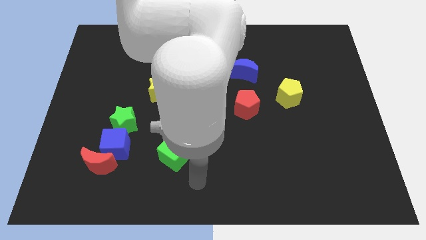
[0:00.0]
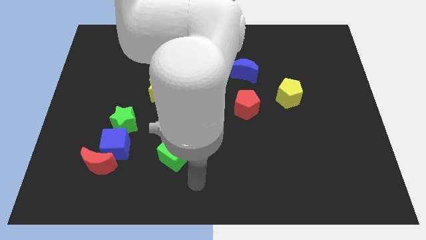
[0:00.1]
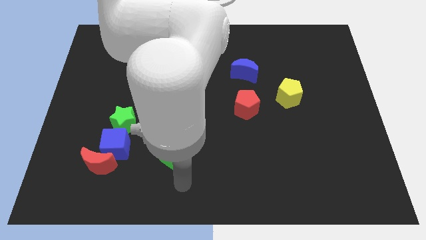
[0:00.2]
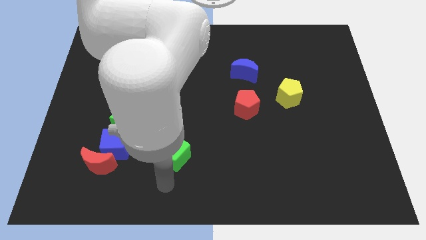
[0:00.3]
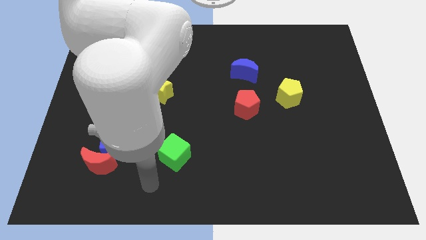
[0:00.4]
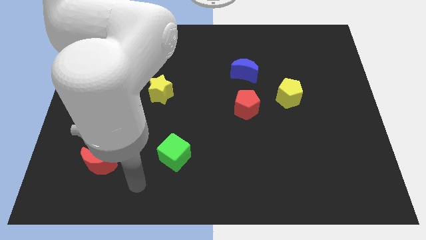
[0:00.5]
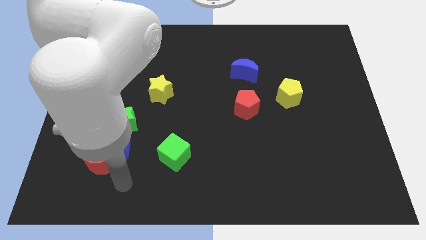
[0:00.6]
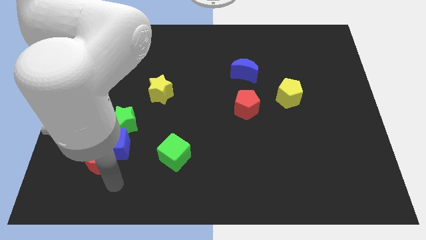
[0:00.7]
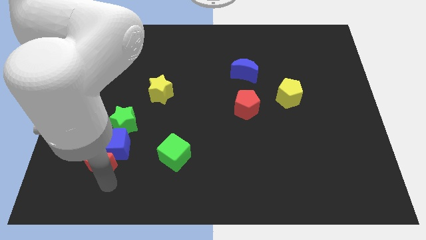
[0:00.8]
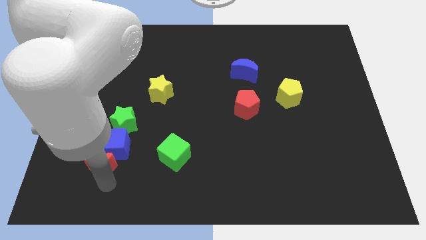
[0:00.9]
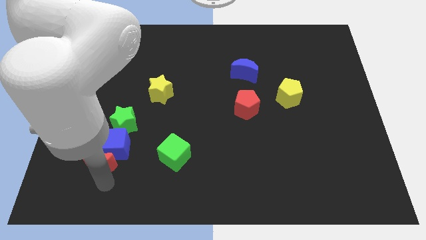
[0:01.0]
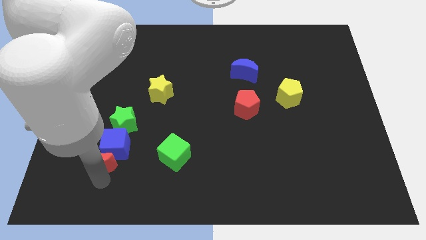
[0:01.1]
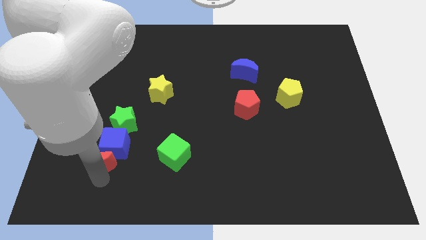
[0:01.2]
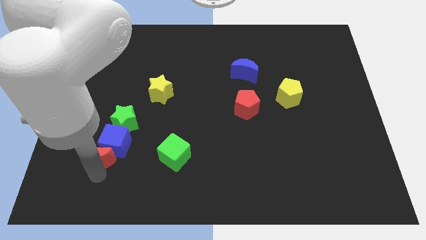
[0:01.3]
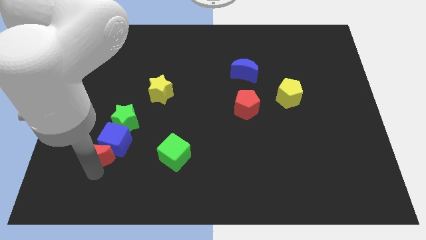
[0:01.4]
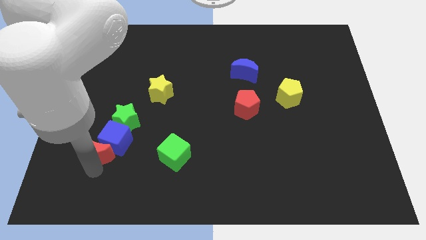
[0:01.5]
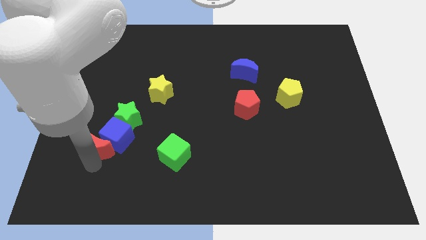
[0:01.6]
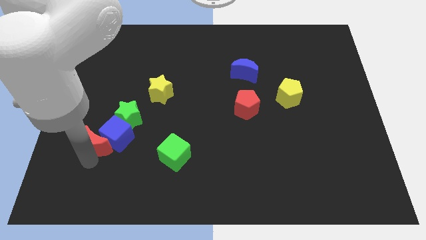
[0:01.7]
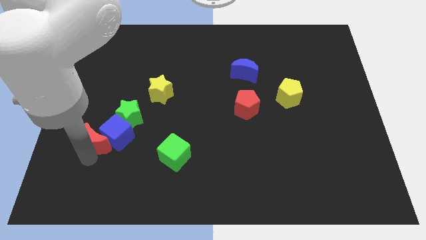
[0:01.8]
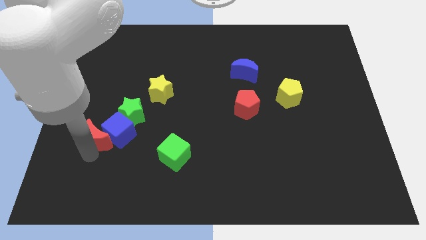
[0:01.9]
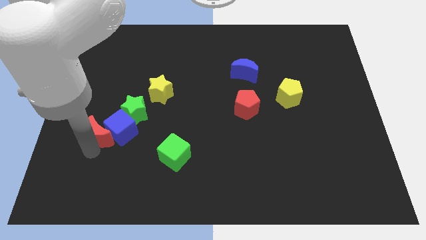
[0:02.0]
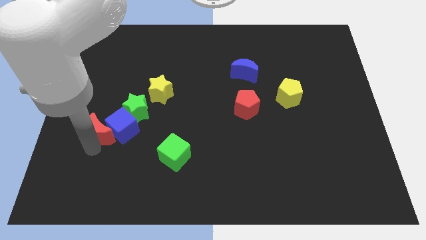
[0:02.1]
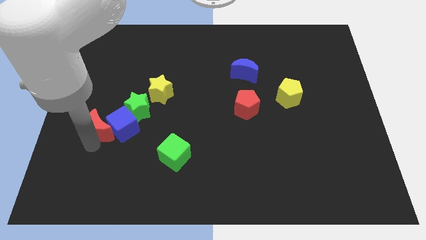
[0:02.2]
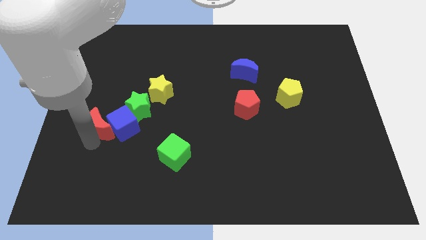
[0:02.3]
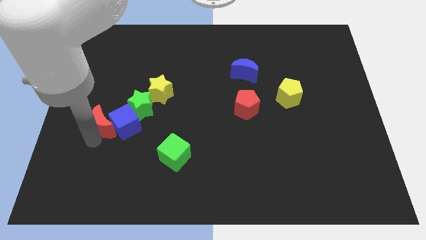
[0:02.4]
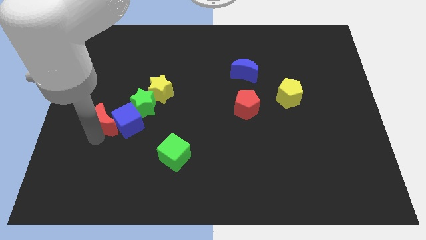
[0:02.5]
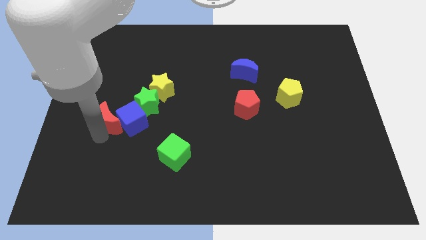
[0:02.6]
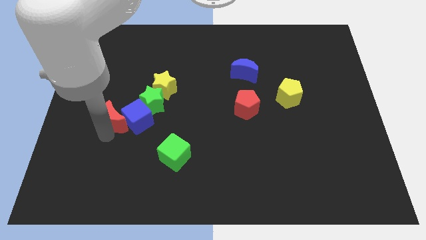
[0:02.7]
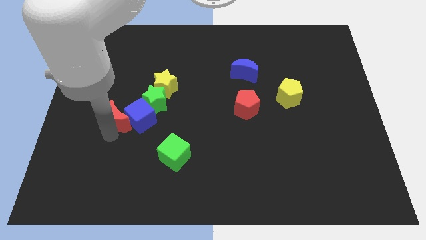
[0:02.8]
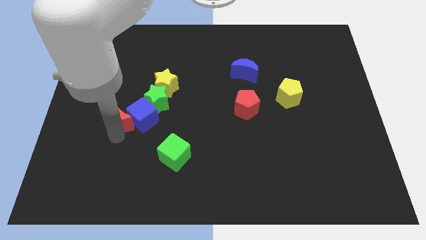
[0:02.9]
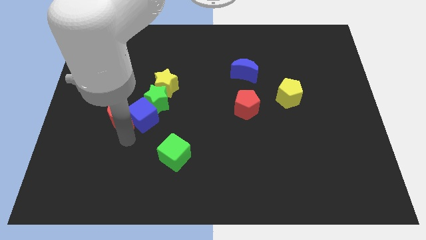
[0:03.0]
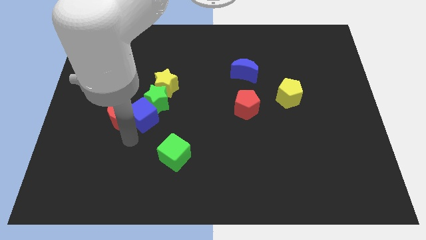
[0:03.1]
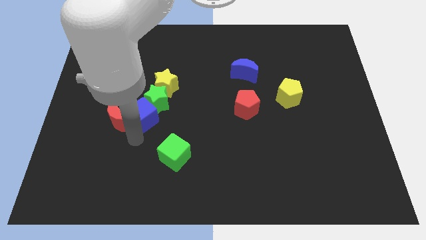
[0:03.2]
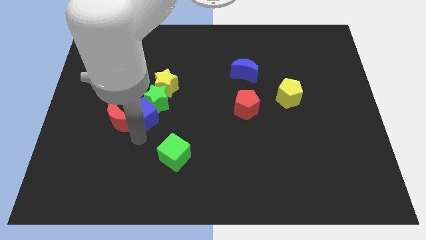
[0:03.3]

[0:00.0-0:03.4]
push the red moon into blue cube towards up

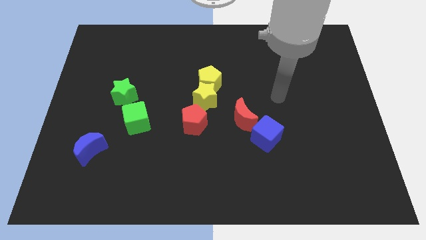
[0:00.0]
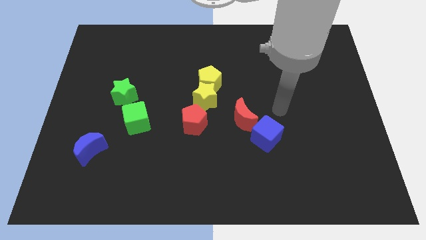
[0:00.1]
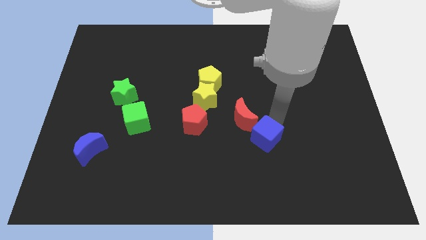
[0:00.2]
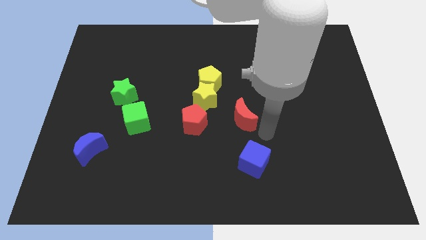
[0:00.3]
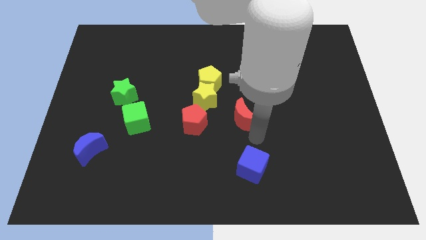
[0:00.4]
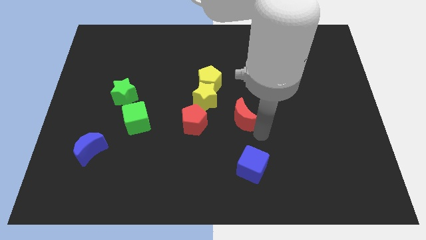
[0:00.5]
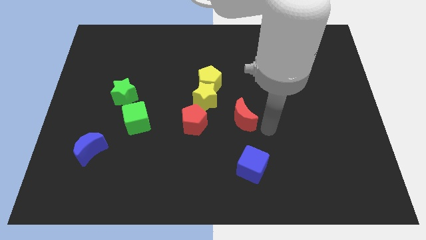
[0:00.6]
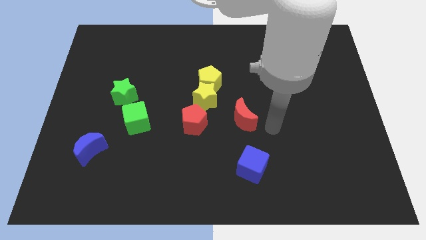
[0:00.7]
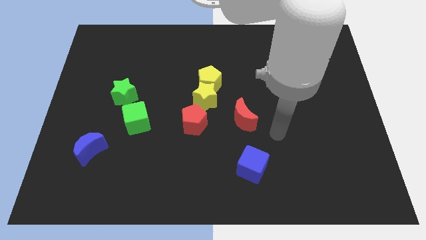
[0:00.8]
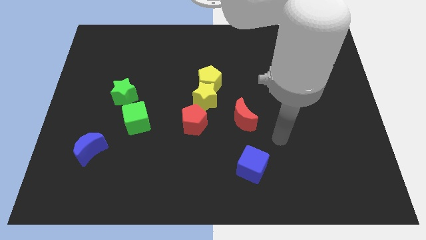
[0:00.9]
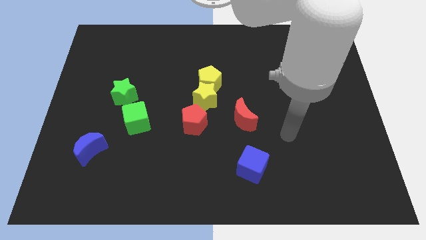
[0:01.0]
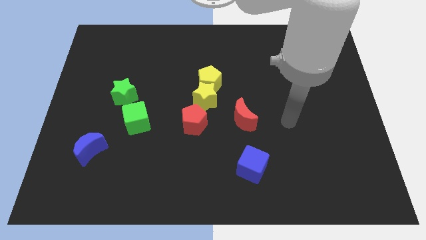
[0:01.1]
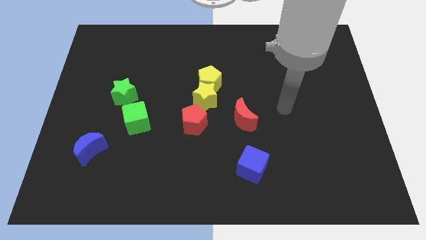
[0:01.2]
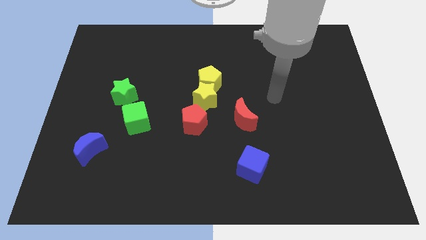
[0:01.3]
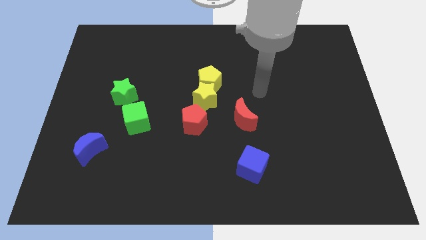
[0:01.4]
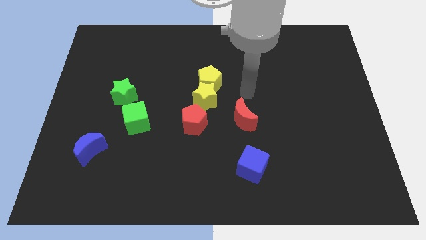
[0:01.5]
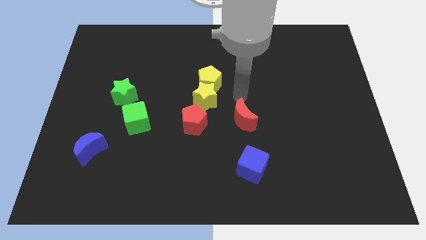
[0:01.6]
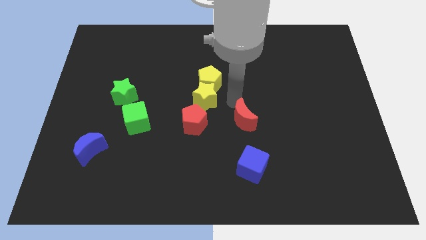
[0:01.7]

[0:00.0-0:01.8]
move the blue cube away from the bottom left side of the red moon

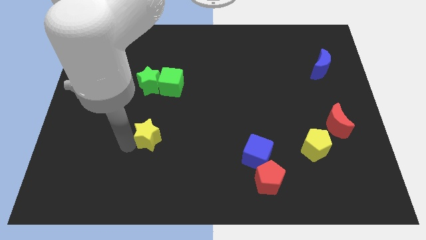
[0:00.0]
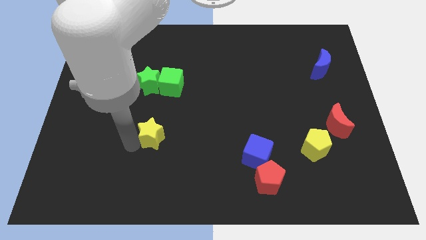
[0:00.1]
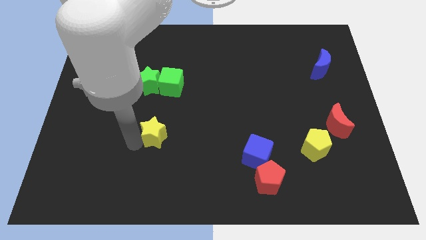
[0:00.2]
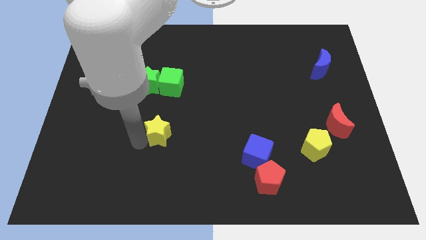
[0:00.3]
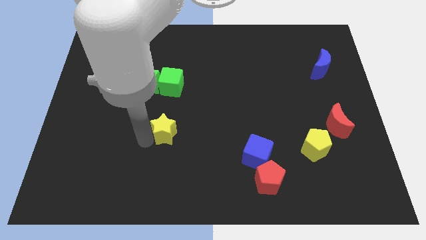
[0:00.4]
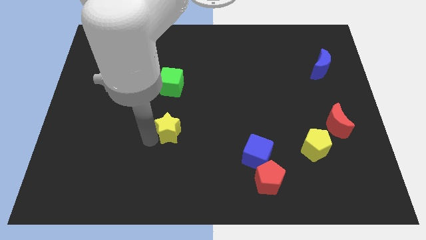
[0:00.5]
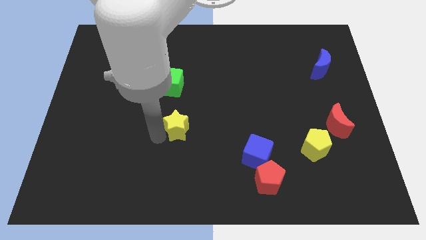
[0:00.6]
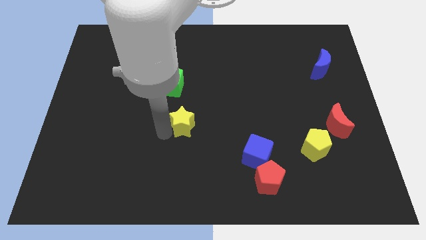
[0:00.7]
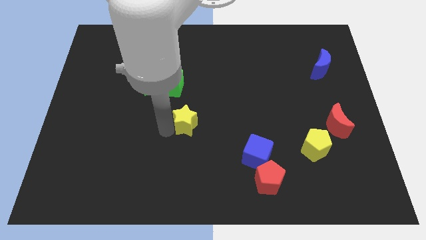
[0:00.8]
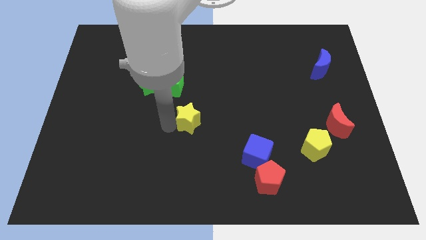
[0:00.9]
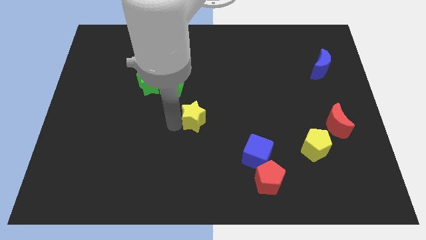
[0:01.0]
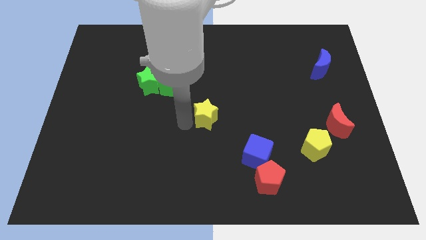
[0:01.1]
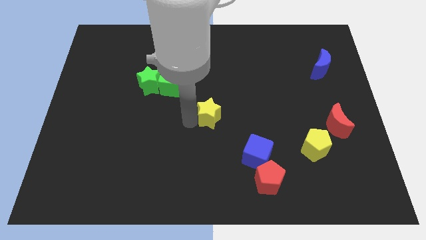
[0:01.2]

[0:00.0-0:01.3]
push the yellow star to the center of the board

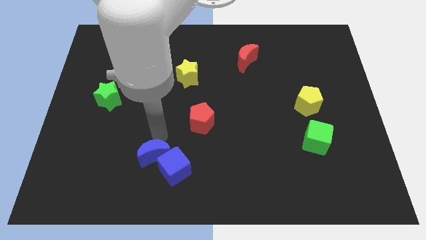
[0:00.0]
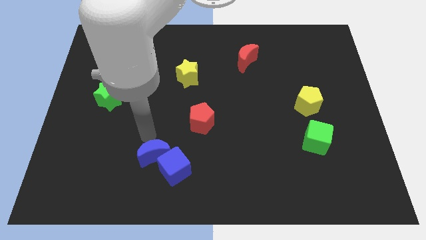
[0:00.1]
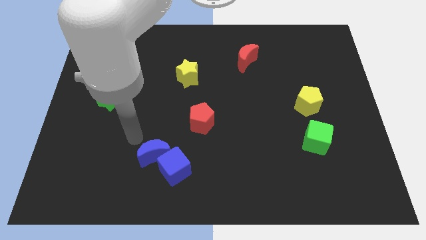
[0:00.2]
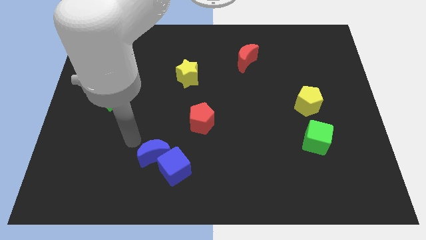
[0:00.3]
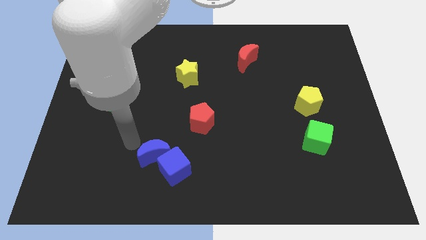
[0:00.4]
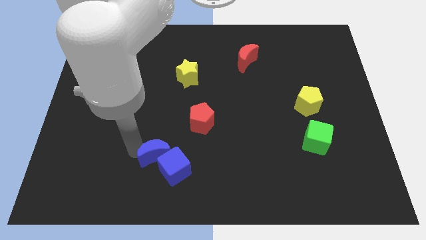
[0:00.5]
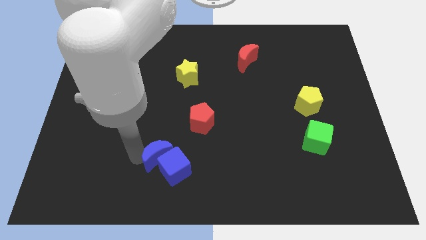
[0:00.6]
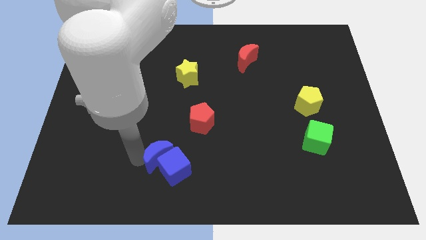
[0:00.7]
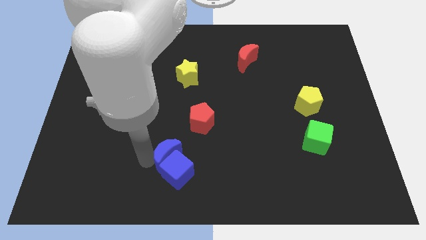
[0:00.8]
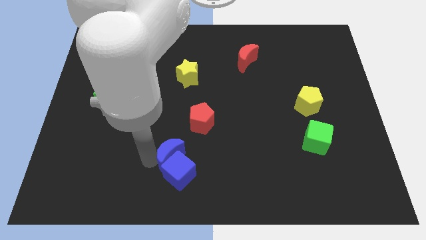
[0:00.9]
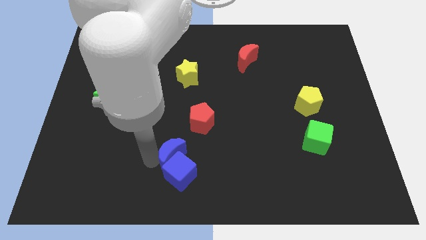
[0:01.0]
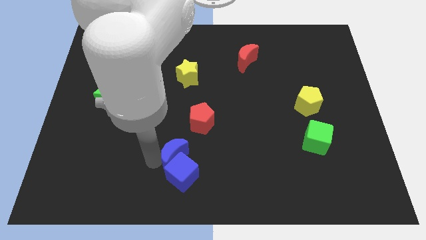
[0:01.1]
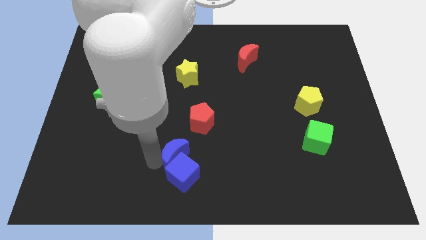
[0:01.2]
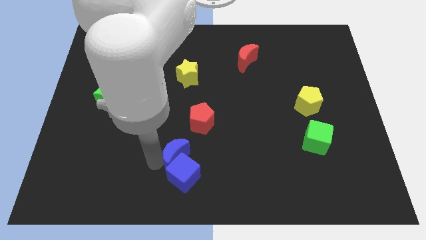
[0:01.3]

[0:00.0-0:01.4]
push the blue crescent along with the blue cube slightly downwards

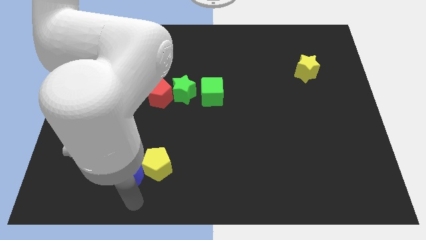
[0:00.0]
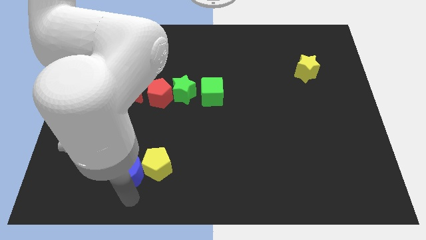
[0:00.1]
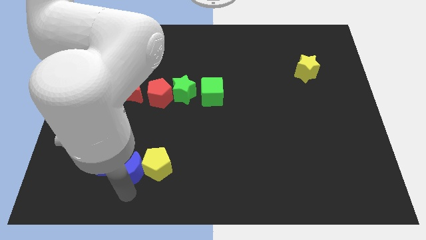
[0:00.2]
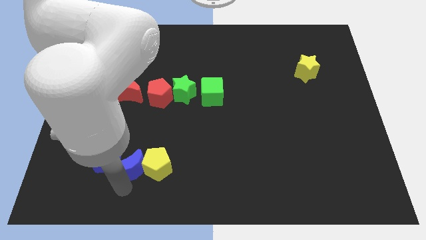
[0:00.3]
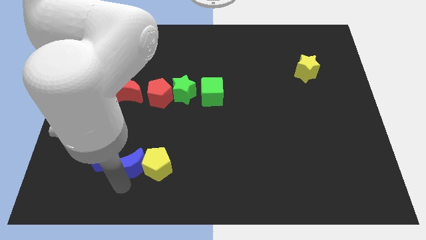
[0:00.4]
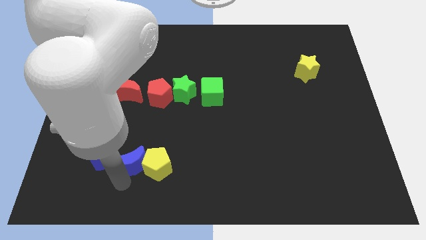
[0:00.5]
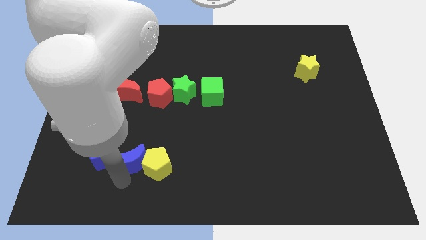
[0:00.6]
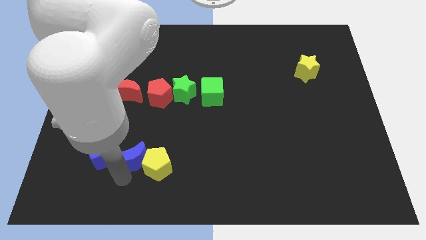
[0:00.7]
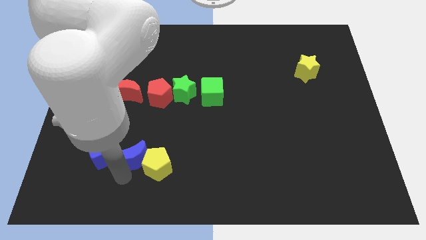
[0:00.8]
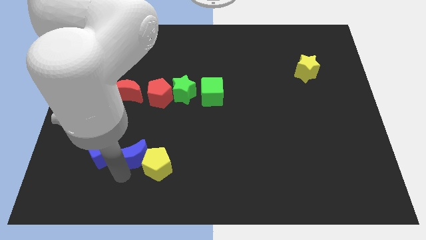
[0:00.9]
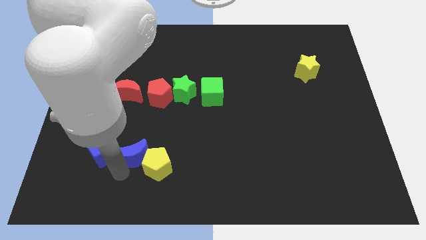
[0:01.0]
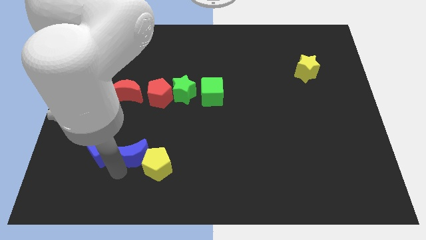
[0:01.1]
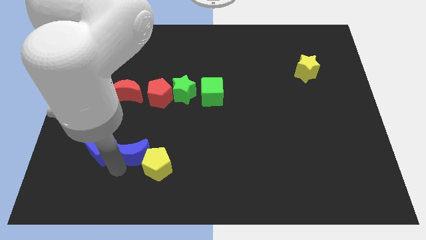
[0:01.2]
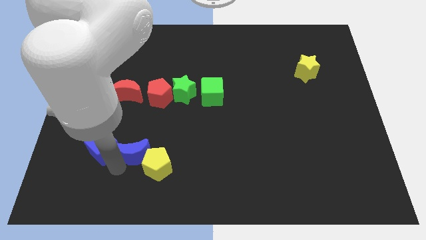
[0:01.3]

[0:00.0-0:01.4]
push the blue crescent to the right of the blue cube
